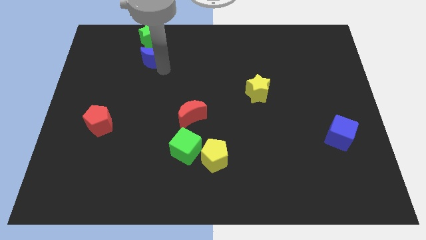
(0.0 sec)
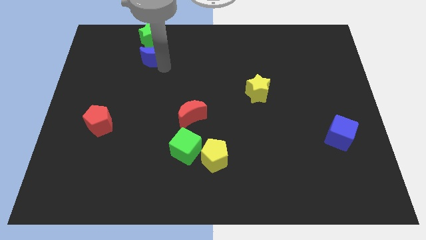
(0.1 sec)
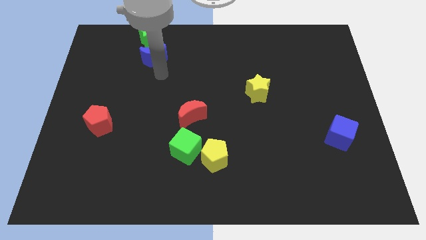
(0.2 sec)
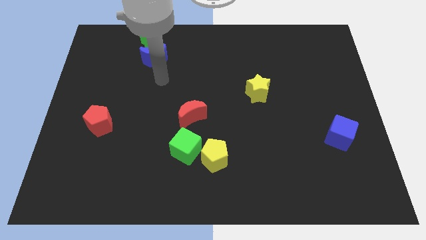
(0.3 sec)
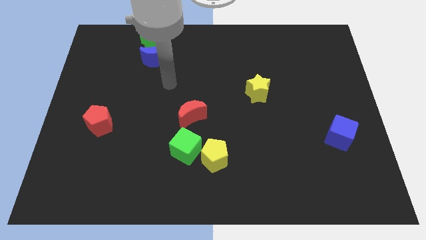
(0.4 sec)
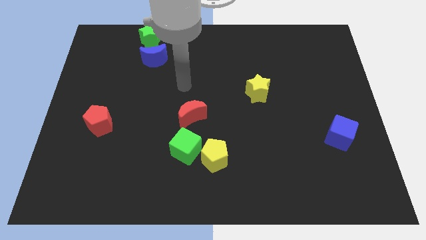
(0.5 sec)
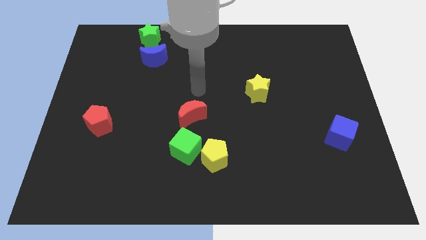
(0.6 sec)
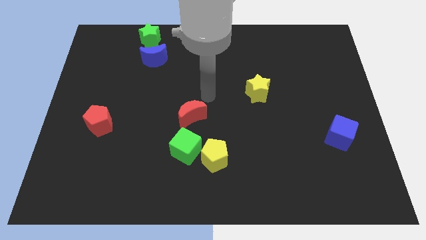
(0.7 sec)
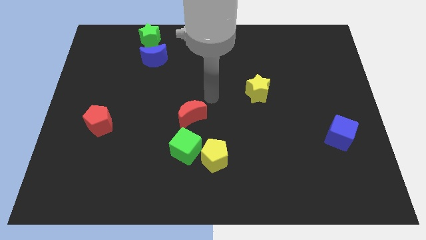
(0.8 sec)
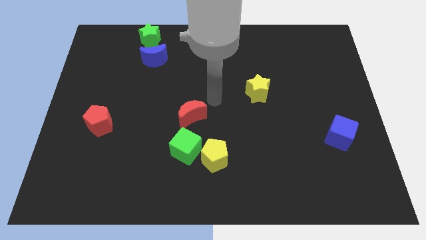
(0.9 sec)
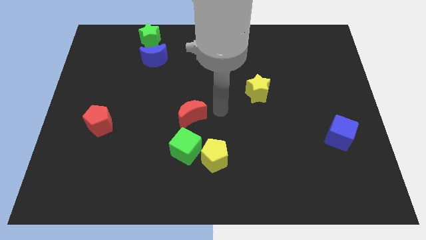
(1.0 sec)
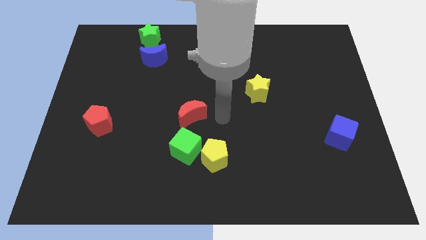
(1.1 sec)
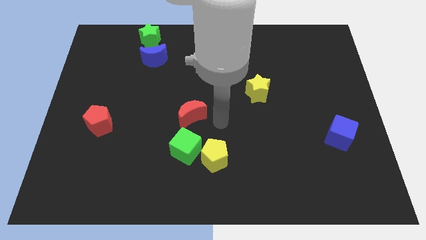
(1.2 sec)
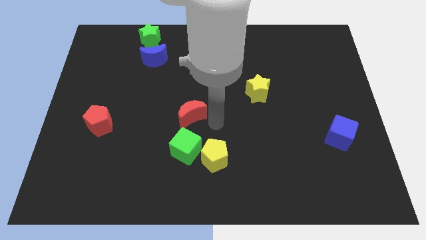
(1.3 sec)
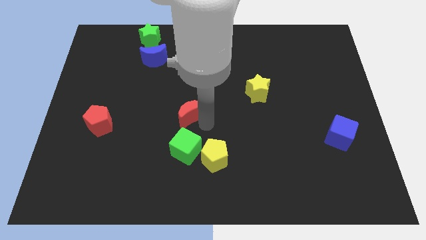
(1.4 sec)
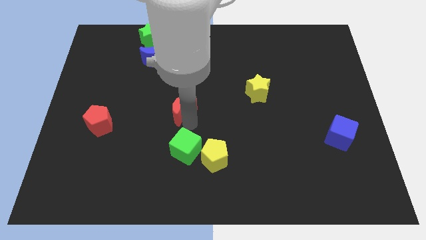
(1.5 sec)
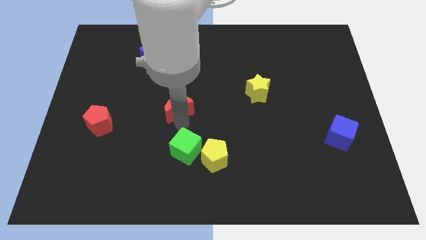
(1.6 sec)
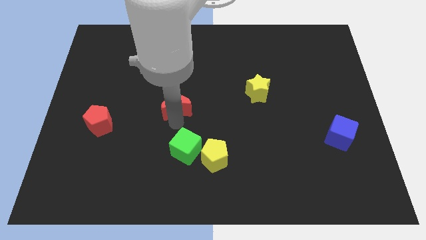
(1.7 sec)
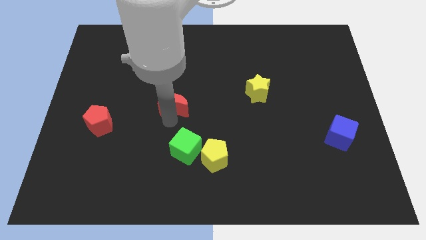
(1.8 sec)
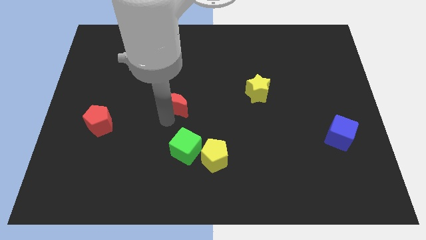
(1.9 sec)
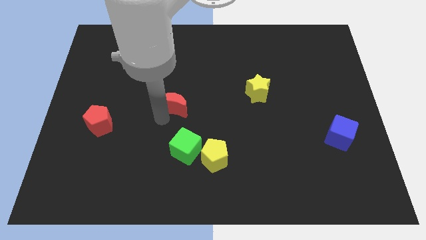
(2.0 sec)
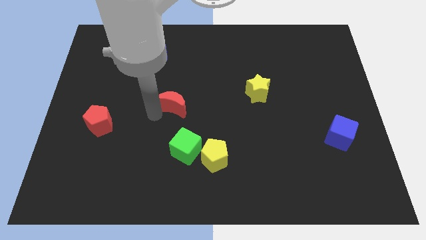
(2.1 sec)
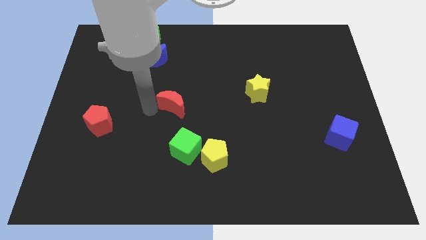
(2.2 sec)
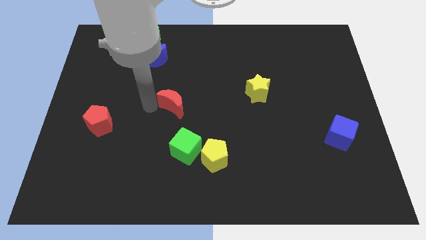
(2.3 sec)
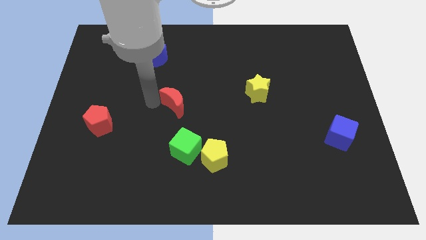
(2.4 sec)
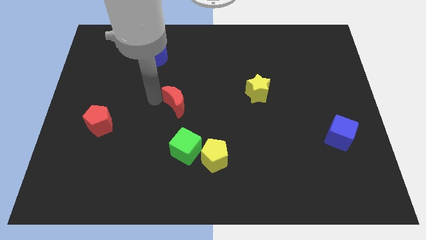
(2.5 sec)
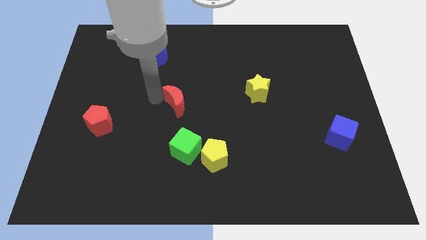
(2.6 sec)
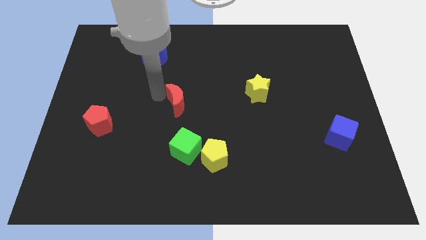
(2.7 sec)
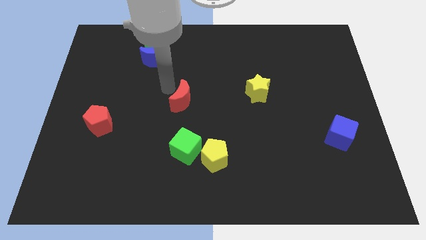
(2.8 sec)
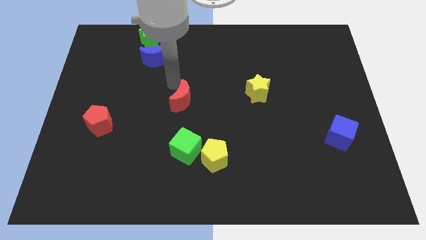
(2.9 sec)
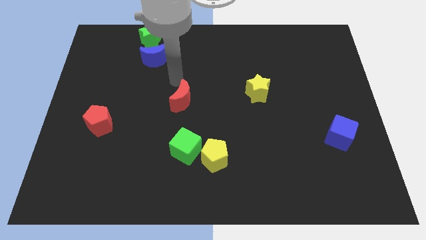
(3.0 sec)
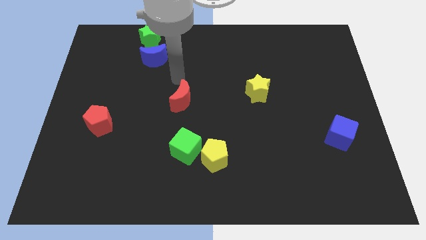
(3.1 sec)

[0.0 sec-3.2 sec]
place the red moon in between the red pentagon and yellow star

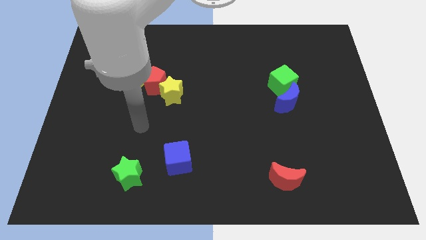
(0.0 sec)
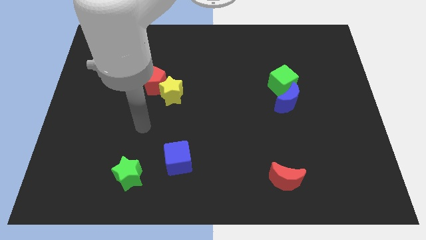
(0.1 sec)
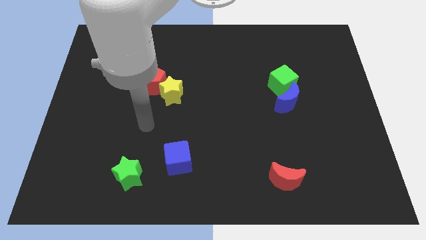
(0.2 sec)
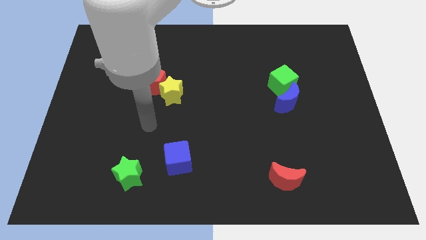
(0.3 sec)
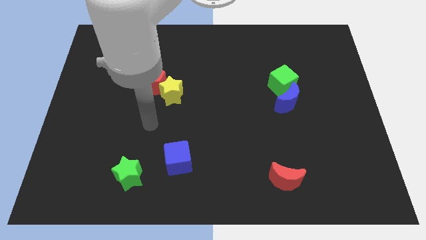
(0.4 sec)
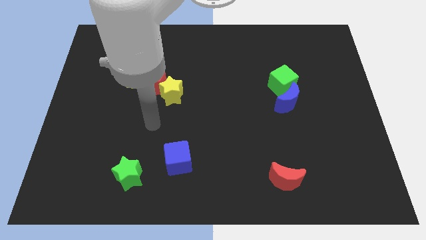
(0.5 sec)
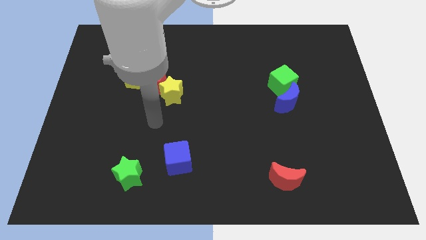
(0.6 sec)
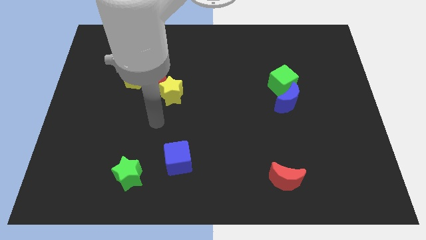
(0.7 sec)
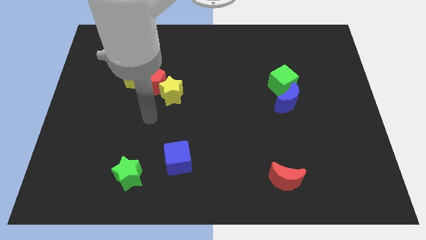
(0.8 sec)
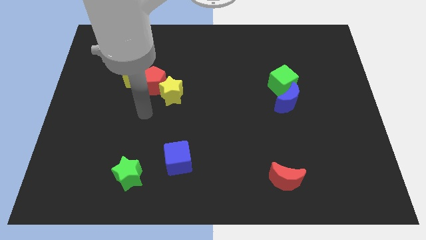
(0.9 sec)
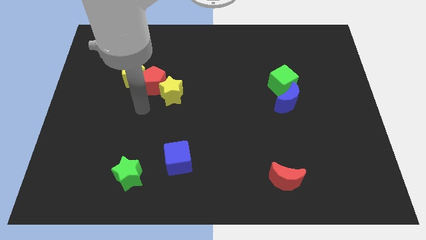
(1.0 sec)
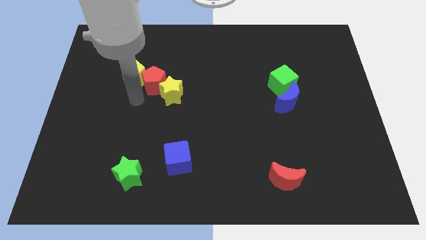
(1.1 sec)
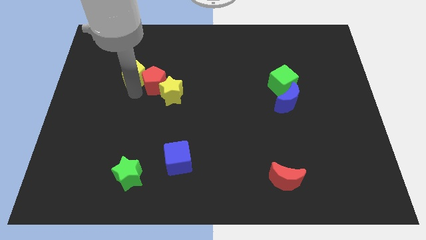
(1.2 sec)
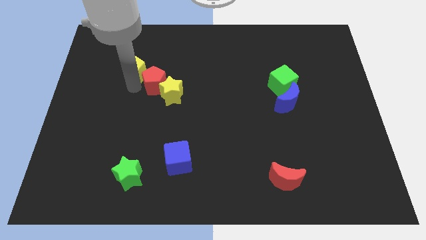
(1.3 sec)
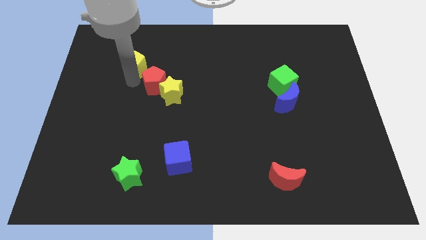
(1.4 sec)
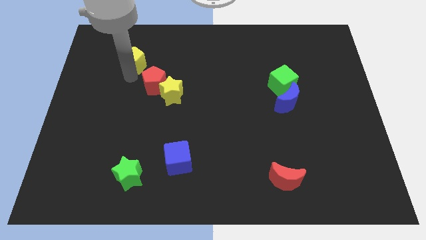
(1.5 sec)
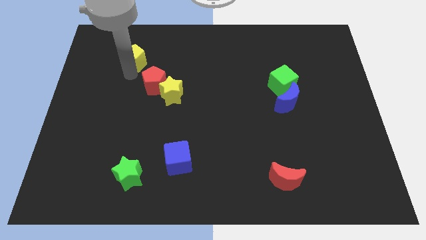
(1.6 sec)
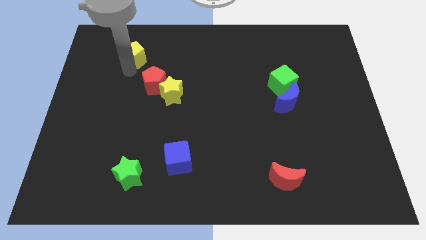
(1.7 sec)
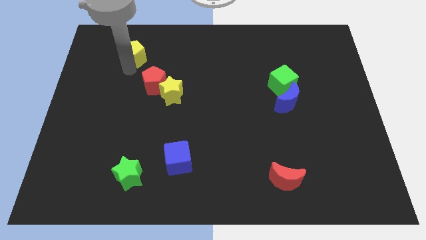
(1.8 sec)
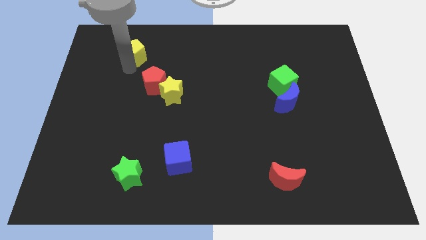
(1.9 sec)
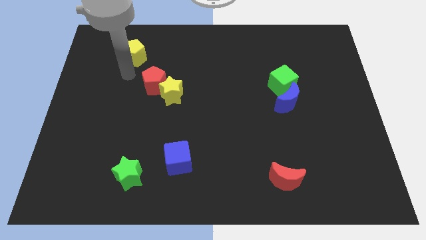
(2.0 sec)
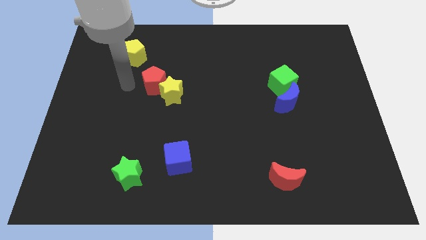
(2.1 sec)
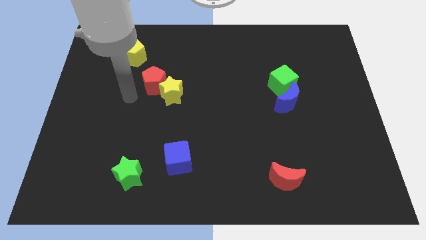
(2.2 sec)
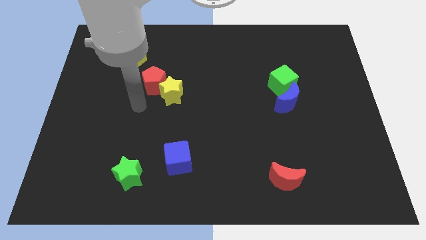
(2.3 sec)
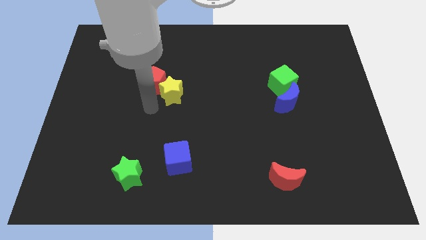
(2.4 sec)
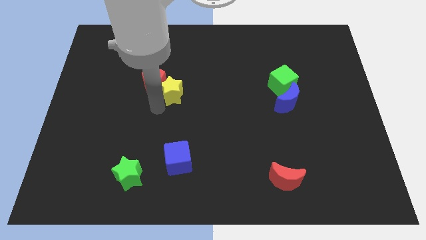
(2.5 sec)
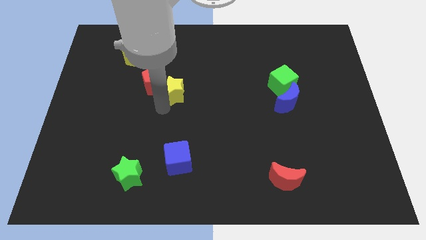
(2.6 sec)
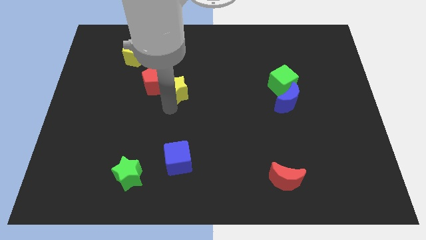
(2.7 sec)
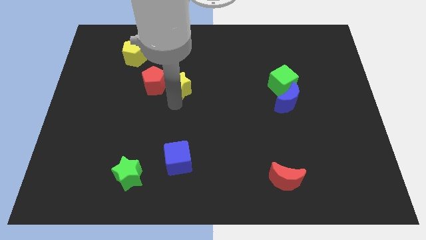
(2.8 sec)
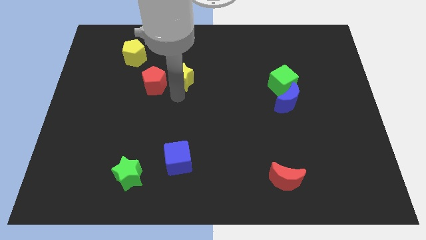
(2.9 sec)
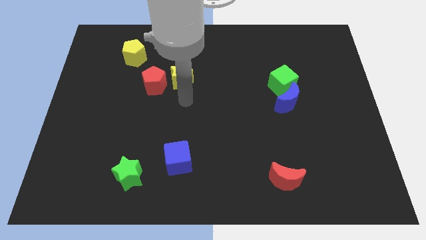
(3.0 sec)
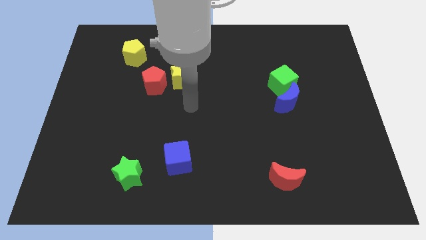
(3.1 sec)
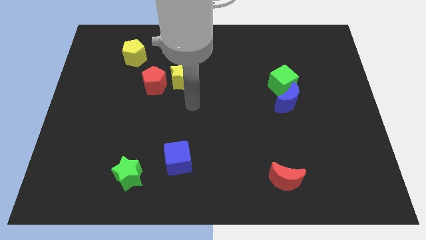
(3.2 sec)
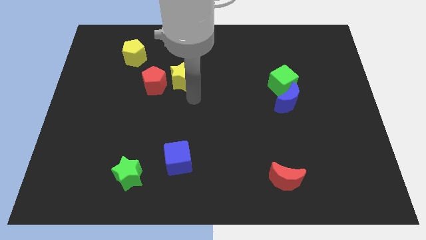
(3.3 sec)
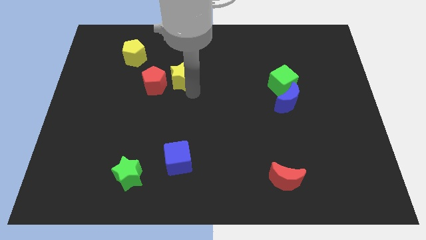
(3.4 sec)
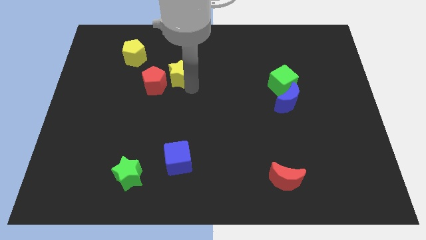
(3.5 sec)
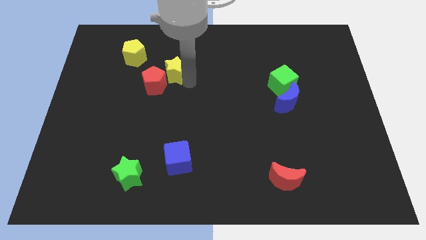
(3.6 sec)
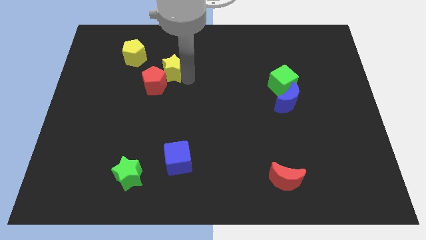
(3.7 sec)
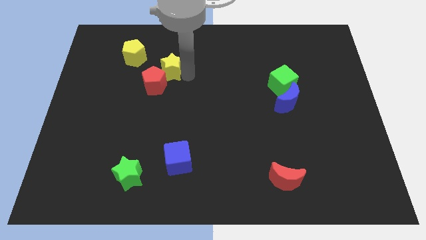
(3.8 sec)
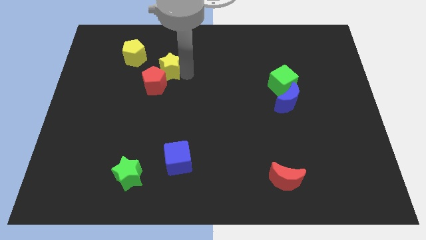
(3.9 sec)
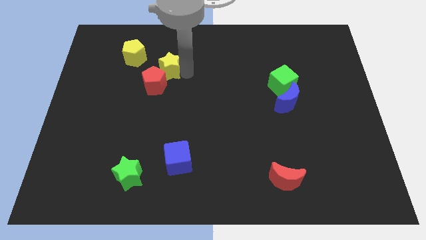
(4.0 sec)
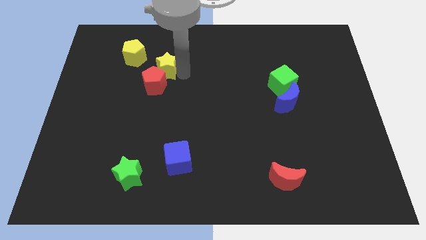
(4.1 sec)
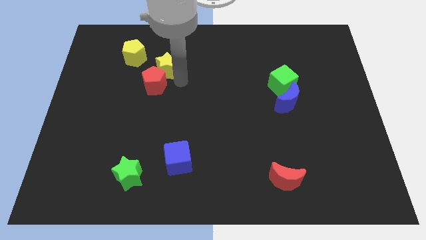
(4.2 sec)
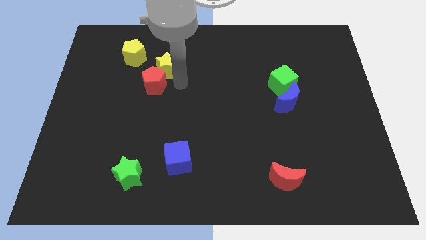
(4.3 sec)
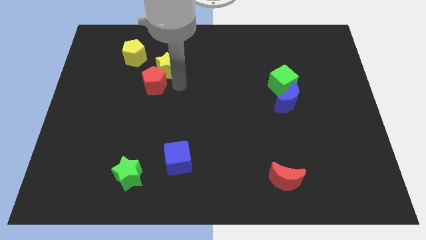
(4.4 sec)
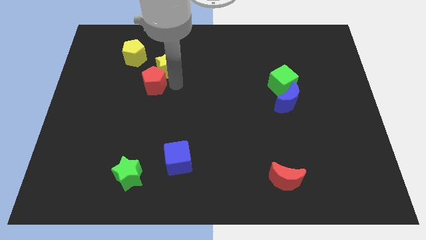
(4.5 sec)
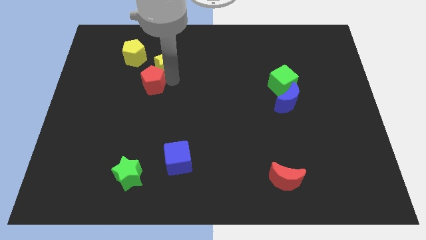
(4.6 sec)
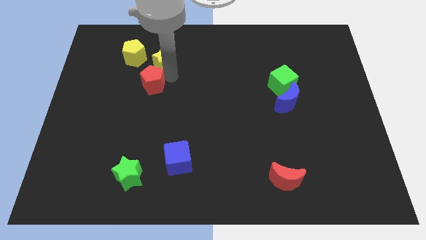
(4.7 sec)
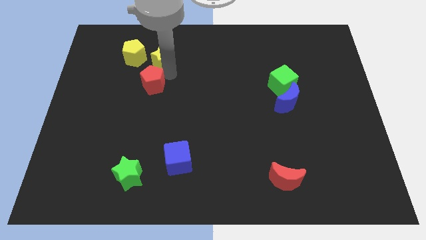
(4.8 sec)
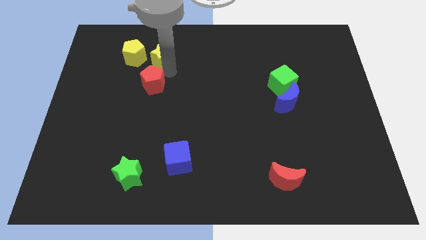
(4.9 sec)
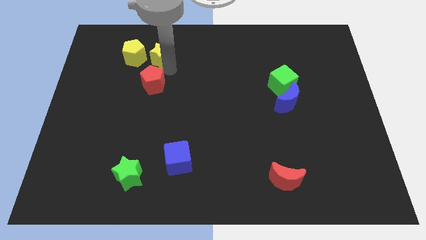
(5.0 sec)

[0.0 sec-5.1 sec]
separate the yellow blocks from the red pentagon

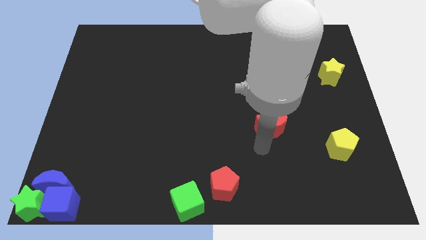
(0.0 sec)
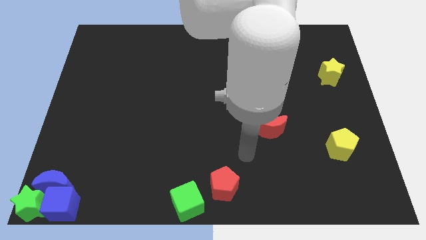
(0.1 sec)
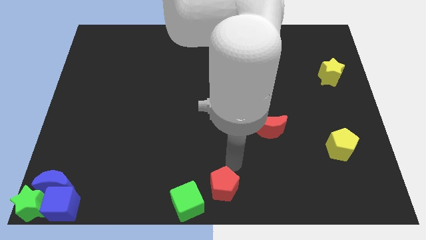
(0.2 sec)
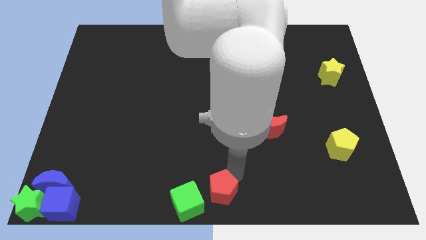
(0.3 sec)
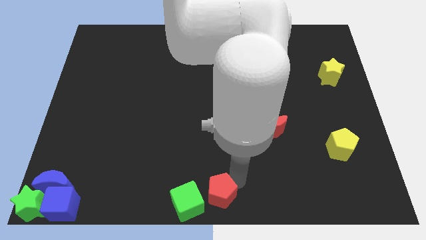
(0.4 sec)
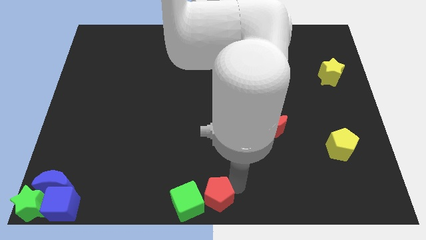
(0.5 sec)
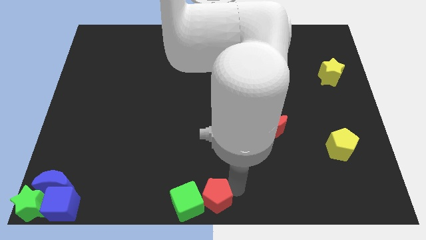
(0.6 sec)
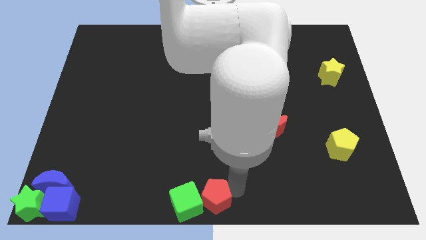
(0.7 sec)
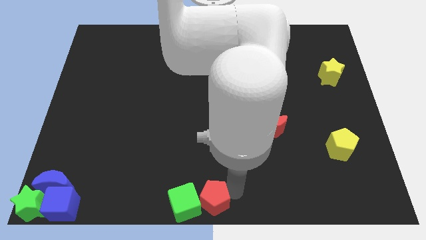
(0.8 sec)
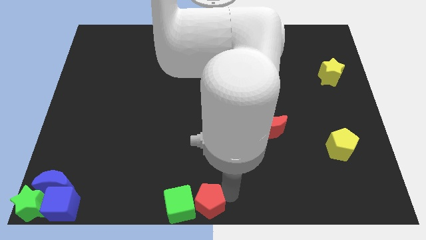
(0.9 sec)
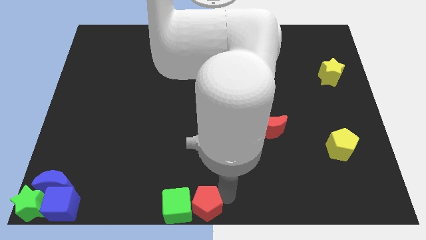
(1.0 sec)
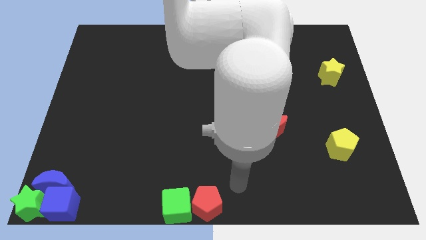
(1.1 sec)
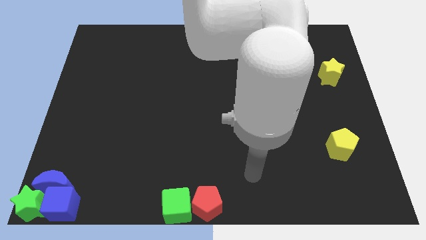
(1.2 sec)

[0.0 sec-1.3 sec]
place the red pentagon right to the green cube
